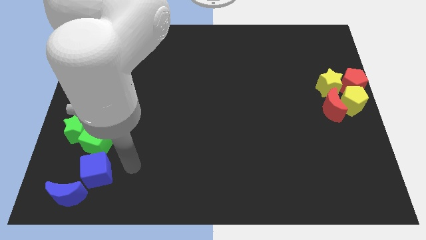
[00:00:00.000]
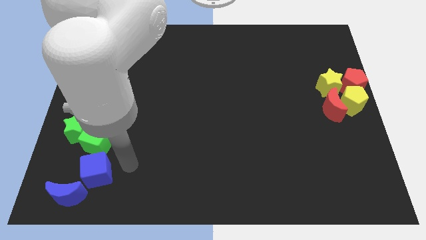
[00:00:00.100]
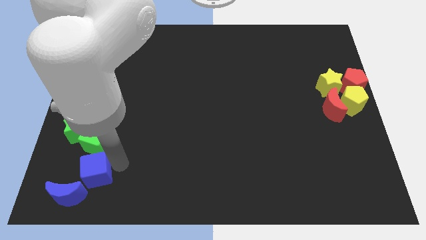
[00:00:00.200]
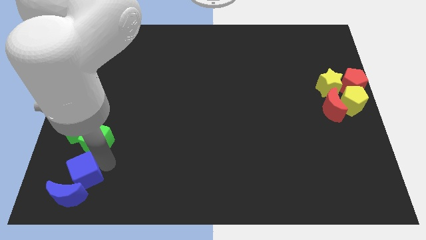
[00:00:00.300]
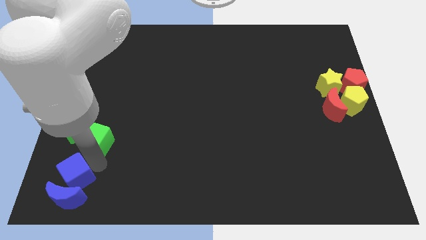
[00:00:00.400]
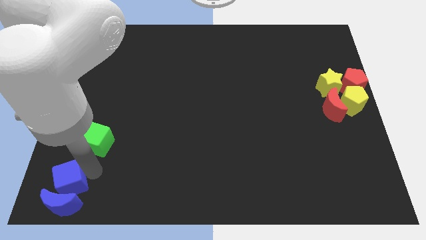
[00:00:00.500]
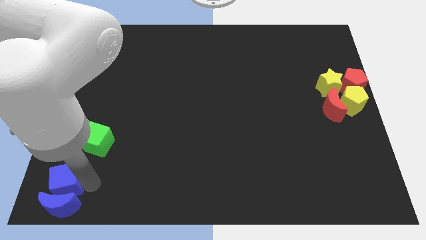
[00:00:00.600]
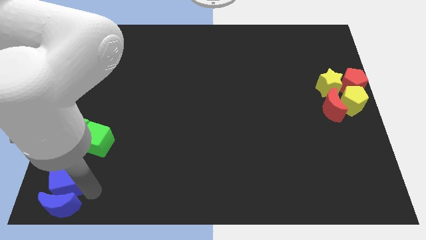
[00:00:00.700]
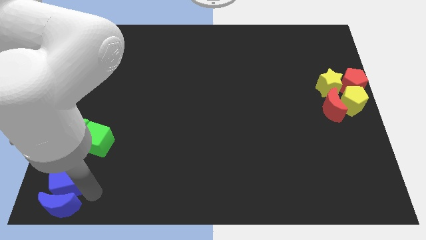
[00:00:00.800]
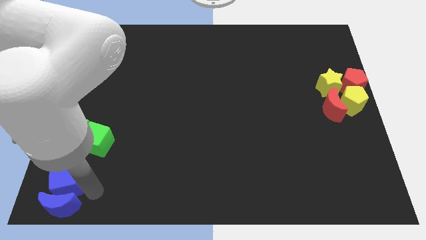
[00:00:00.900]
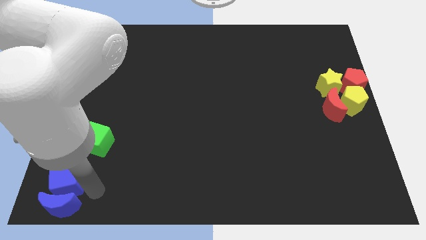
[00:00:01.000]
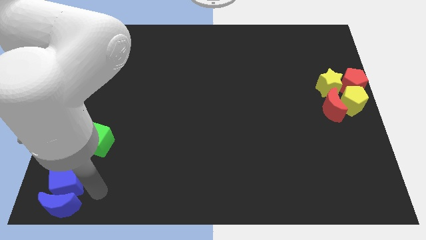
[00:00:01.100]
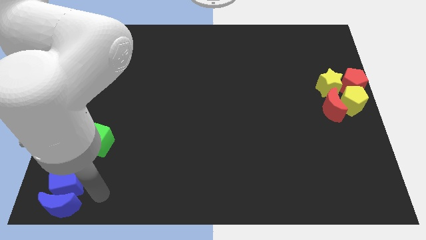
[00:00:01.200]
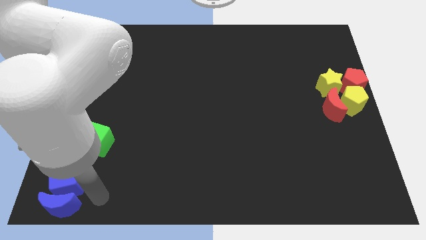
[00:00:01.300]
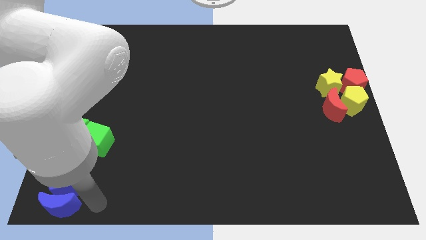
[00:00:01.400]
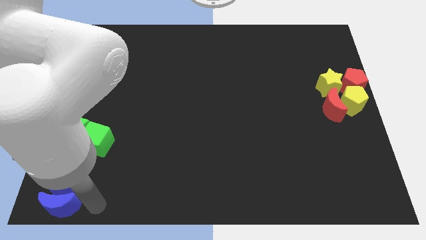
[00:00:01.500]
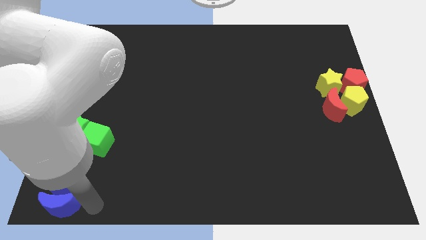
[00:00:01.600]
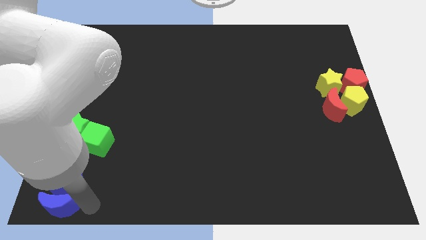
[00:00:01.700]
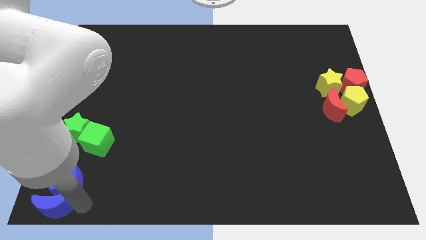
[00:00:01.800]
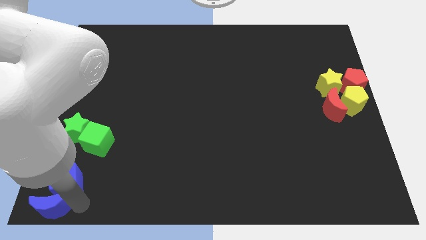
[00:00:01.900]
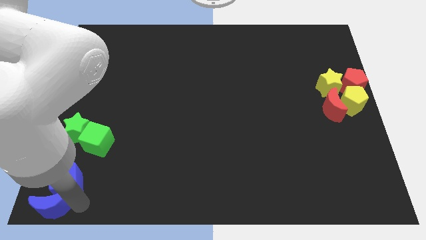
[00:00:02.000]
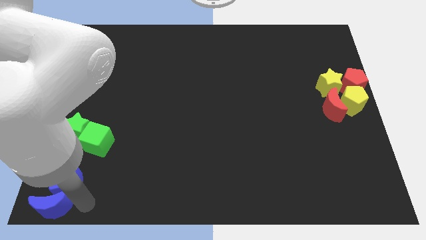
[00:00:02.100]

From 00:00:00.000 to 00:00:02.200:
slide both the blue blocks at the bottom left corner of the board

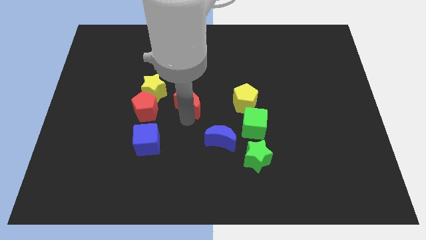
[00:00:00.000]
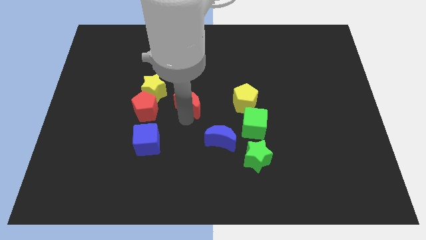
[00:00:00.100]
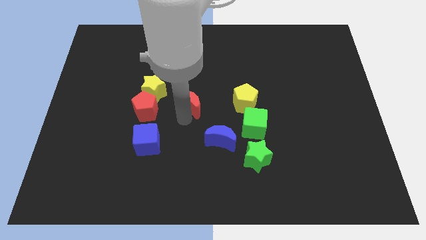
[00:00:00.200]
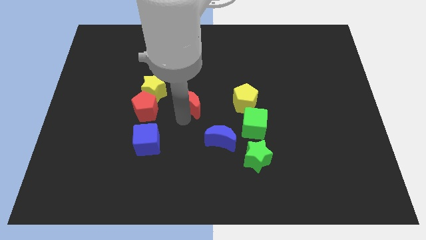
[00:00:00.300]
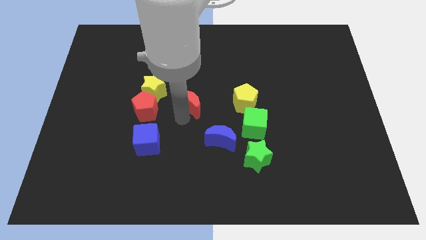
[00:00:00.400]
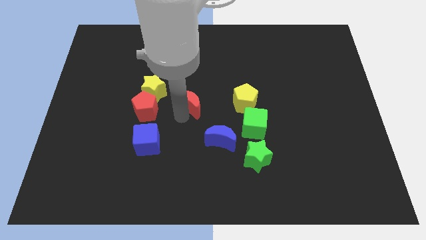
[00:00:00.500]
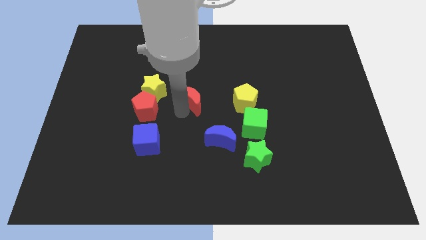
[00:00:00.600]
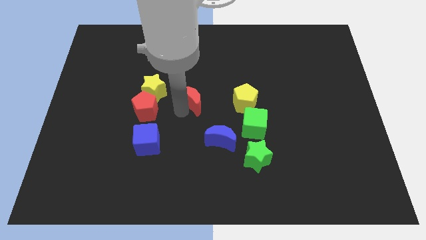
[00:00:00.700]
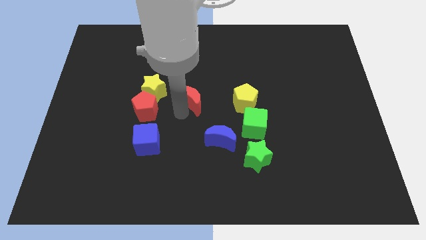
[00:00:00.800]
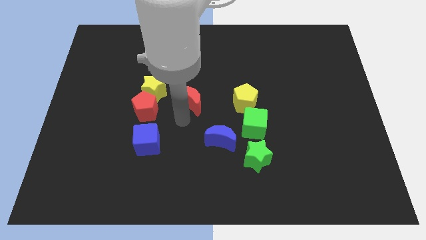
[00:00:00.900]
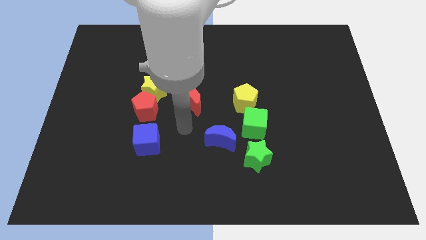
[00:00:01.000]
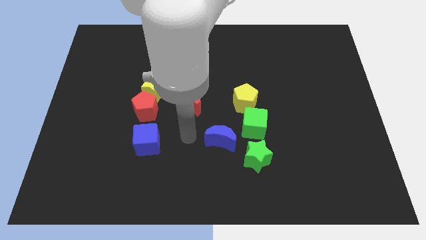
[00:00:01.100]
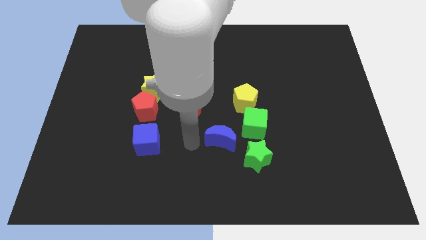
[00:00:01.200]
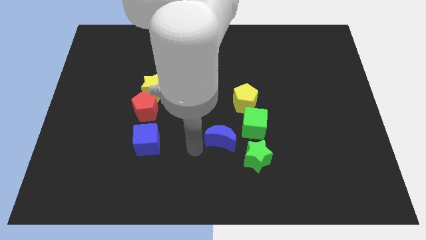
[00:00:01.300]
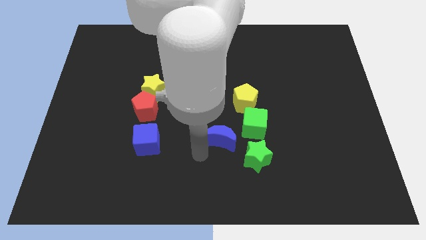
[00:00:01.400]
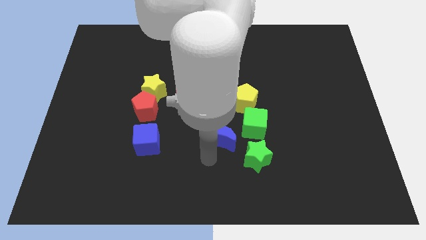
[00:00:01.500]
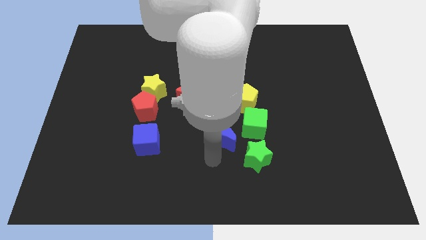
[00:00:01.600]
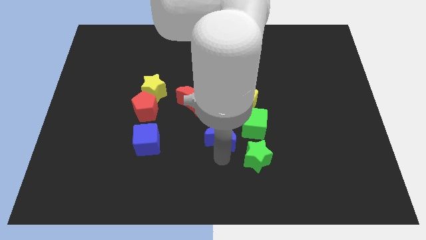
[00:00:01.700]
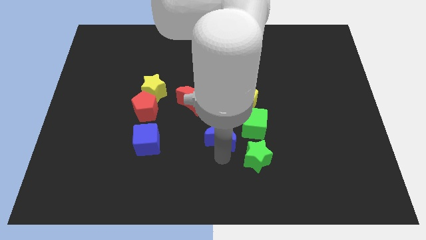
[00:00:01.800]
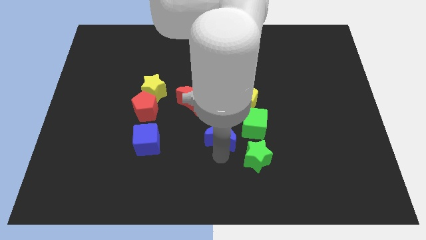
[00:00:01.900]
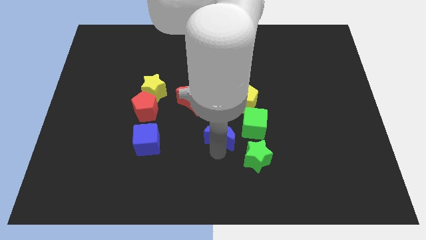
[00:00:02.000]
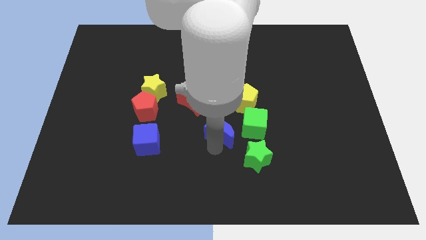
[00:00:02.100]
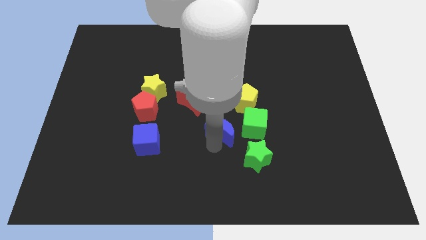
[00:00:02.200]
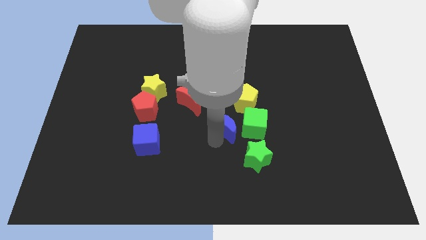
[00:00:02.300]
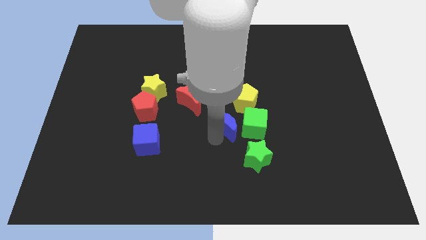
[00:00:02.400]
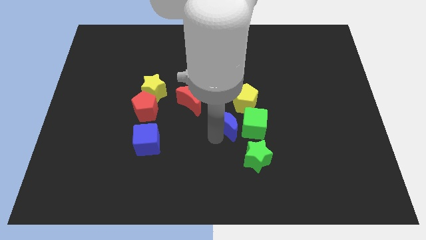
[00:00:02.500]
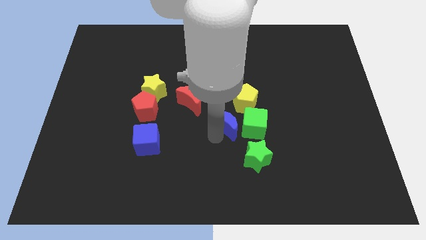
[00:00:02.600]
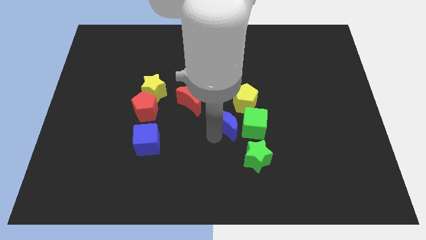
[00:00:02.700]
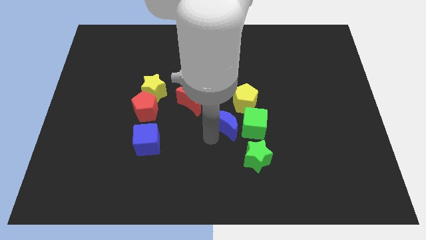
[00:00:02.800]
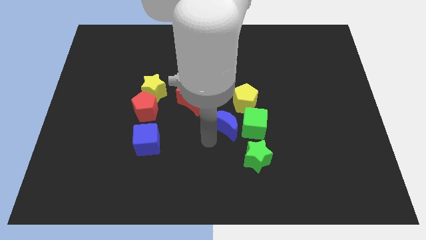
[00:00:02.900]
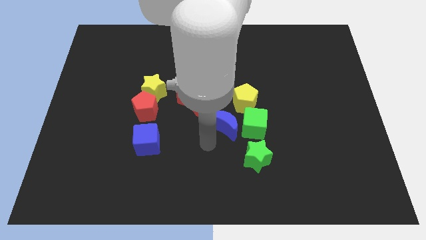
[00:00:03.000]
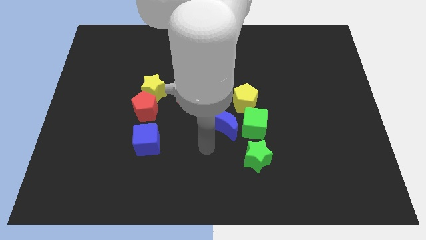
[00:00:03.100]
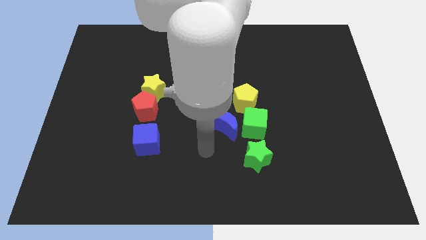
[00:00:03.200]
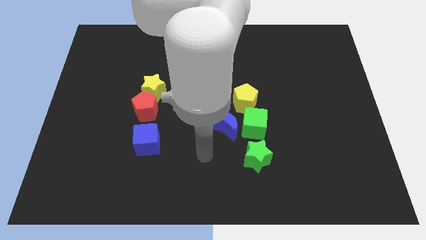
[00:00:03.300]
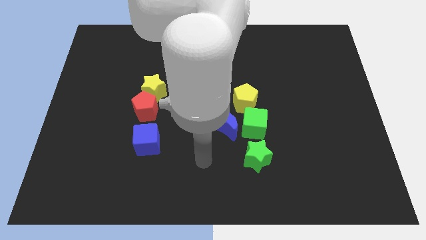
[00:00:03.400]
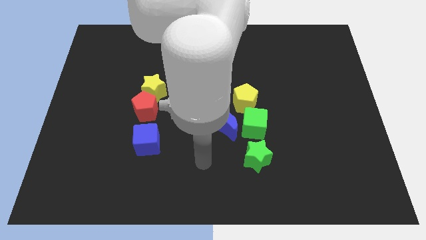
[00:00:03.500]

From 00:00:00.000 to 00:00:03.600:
move the blue crescent to the left of the green cube

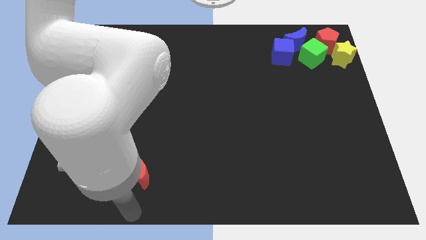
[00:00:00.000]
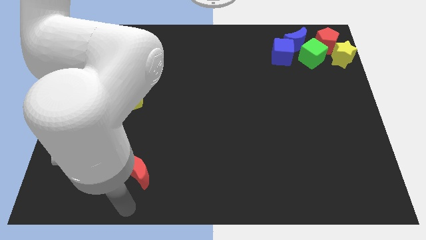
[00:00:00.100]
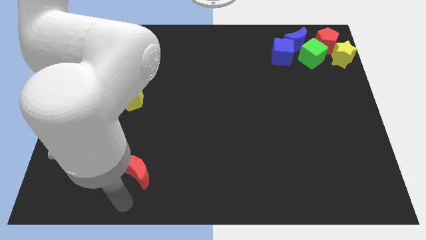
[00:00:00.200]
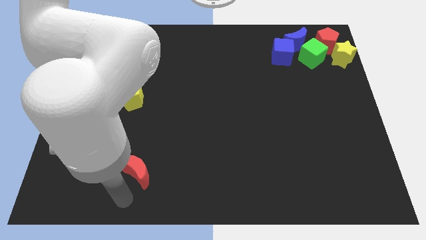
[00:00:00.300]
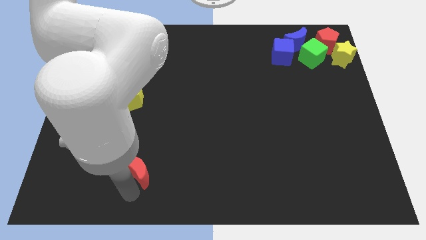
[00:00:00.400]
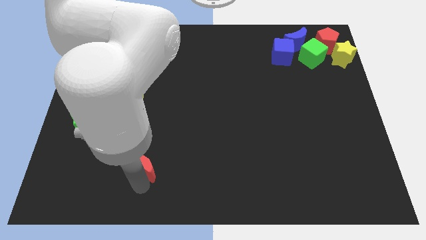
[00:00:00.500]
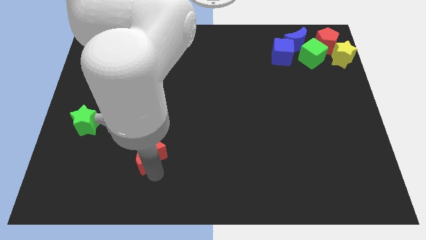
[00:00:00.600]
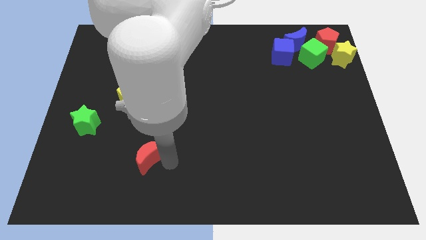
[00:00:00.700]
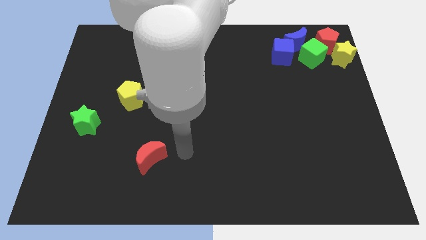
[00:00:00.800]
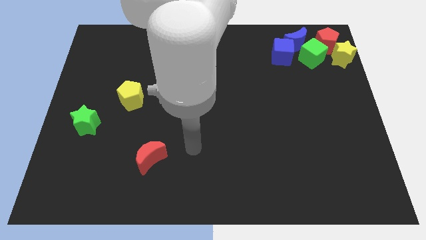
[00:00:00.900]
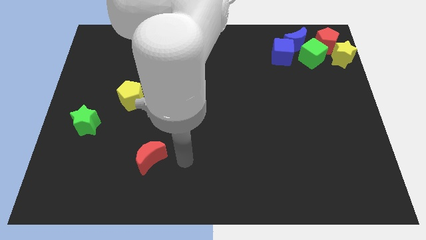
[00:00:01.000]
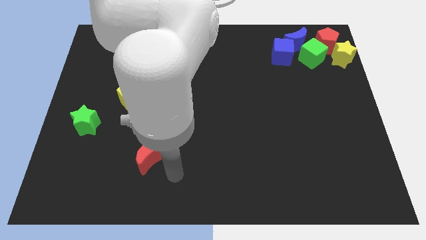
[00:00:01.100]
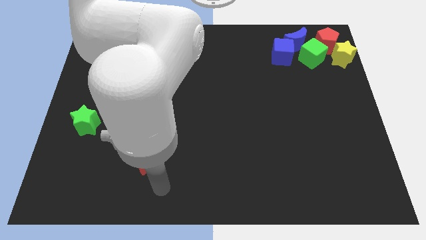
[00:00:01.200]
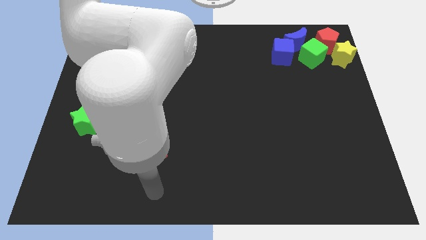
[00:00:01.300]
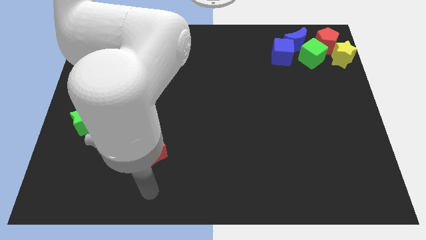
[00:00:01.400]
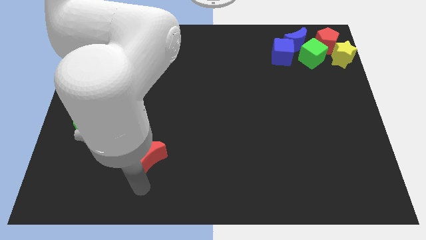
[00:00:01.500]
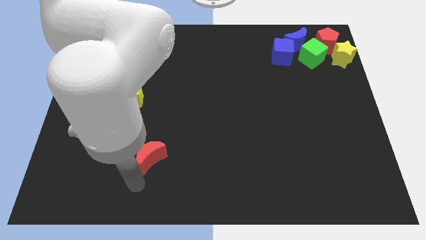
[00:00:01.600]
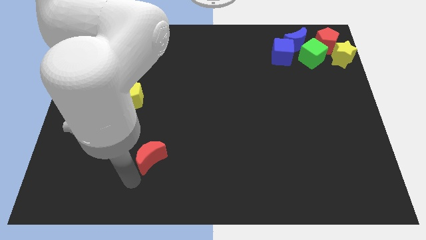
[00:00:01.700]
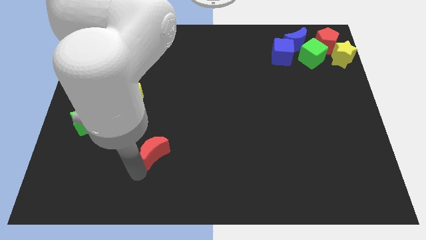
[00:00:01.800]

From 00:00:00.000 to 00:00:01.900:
slightly push the red crescent

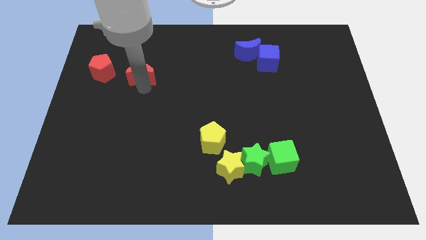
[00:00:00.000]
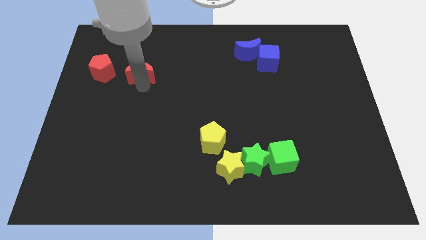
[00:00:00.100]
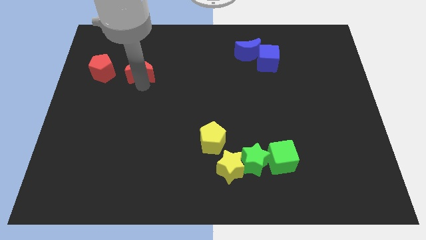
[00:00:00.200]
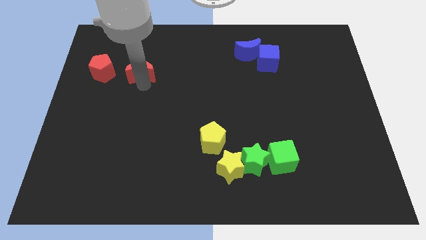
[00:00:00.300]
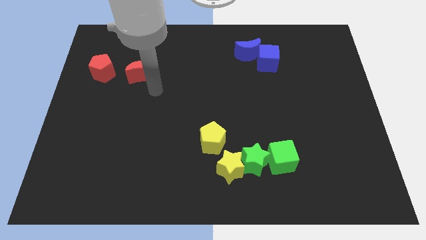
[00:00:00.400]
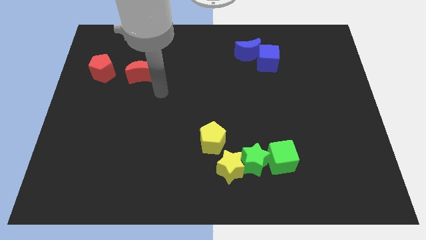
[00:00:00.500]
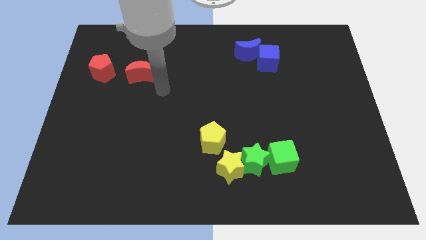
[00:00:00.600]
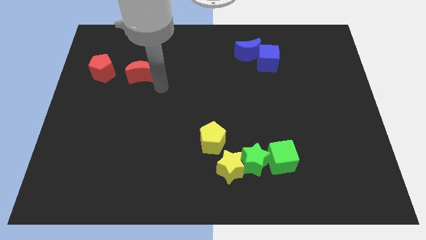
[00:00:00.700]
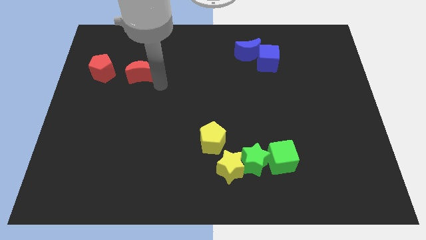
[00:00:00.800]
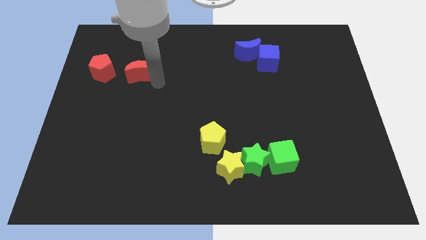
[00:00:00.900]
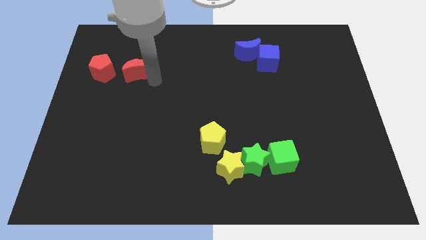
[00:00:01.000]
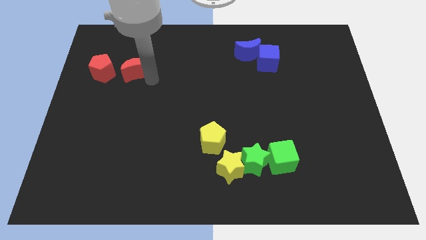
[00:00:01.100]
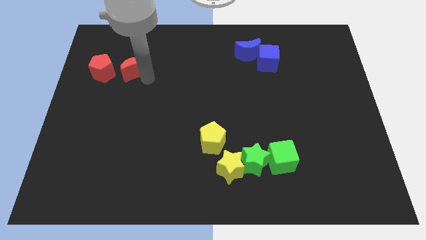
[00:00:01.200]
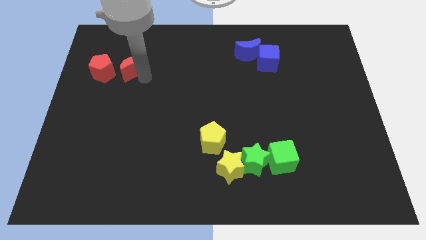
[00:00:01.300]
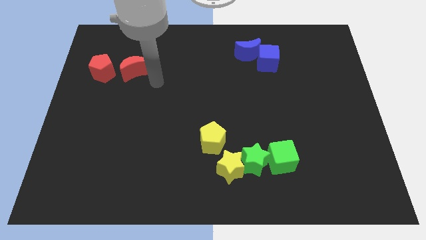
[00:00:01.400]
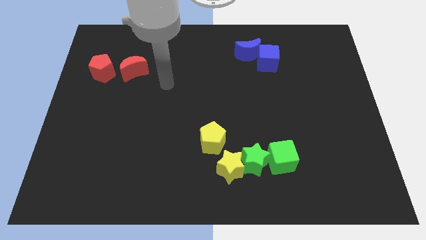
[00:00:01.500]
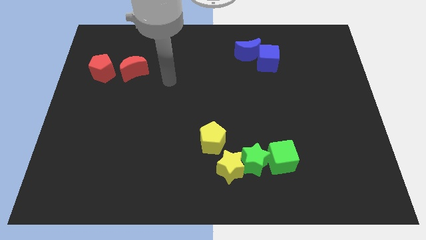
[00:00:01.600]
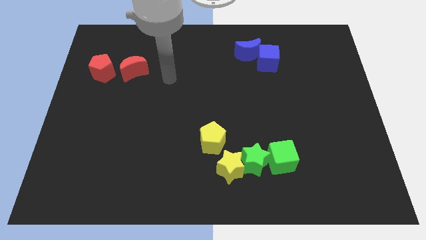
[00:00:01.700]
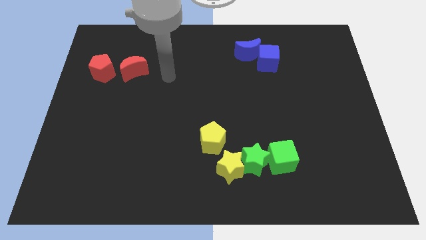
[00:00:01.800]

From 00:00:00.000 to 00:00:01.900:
push red crescent beside red pentagon
